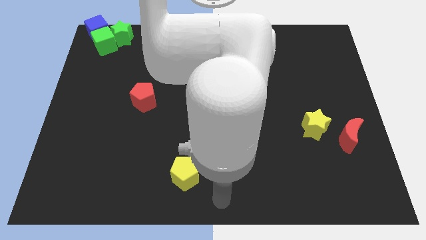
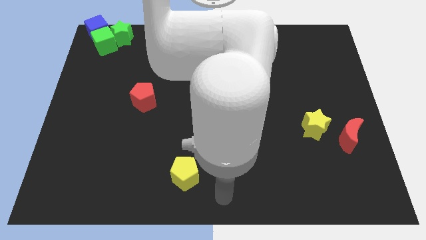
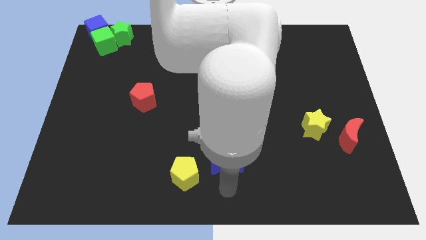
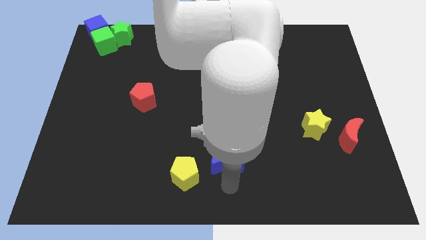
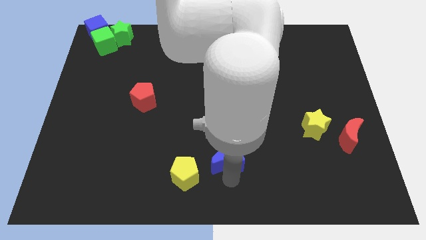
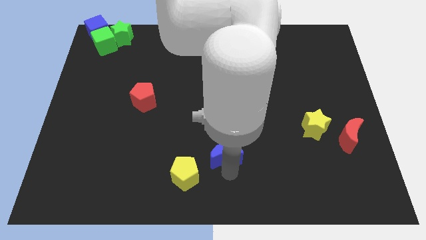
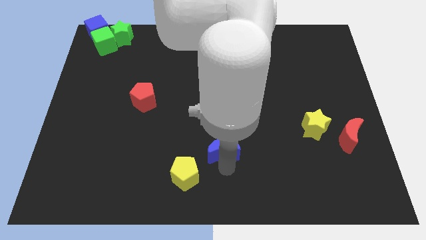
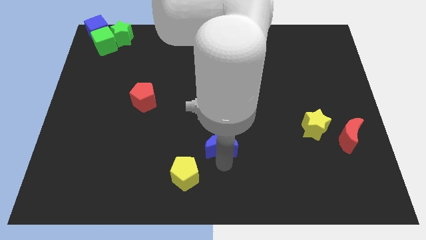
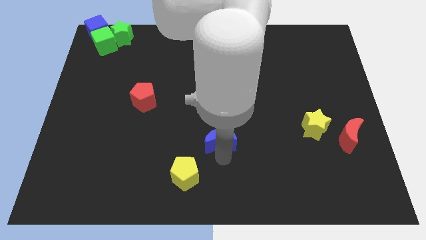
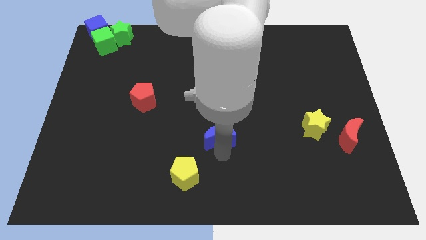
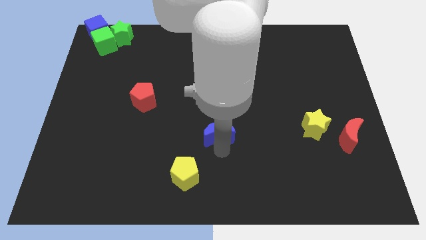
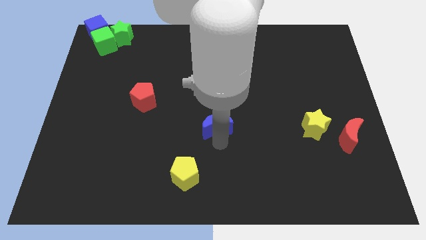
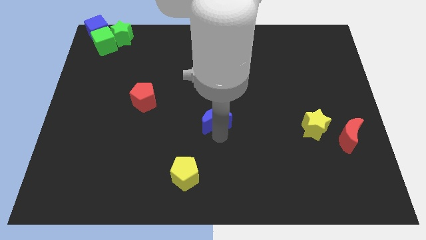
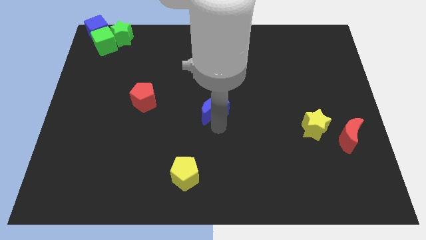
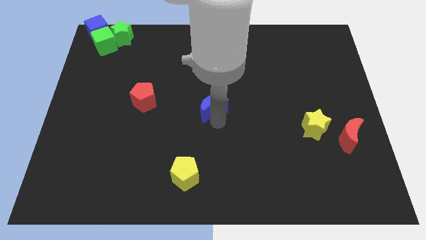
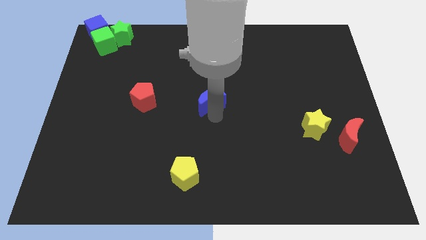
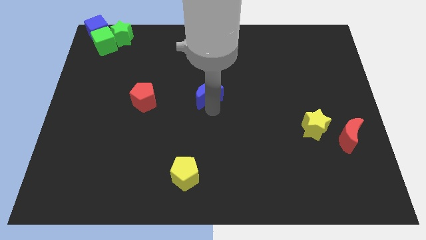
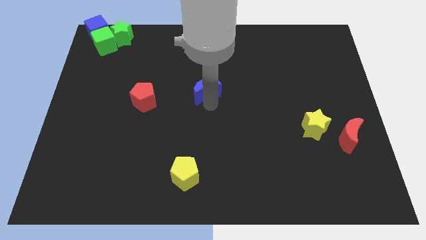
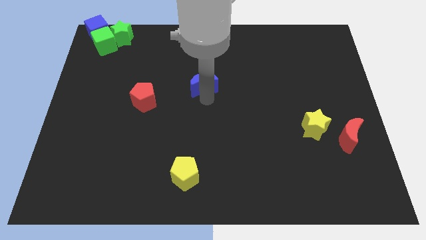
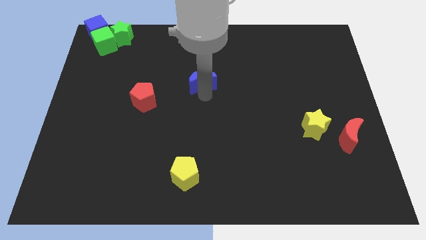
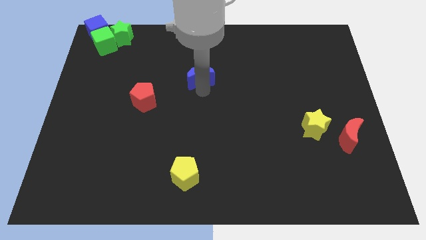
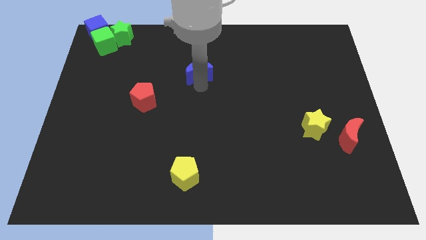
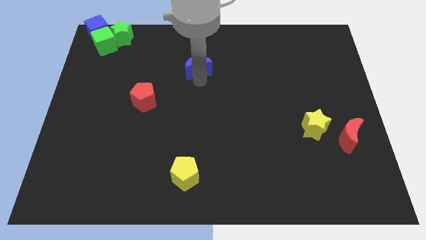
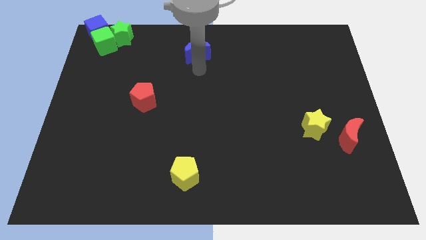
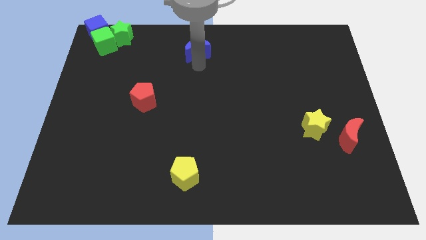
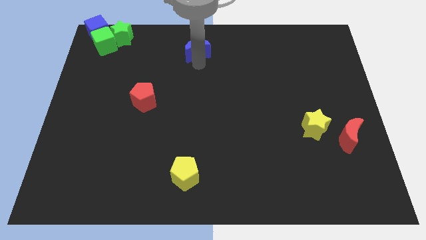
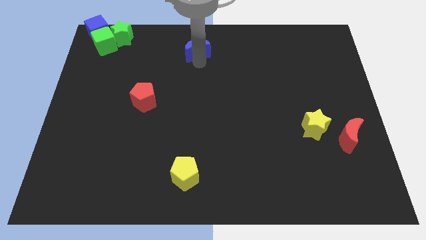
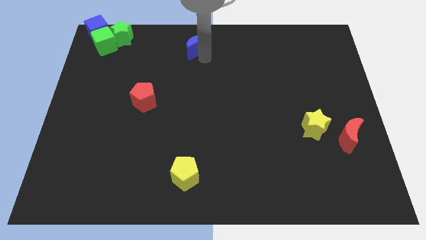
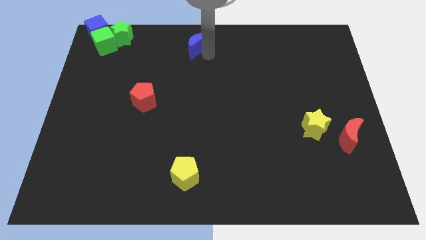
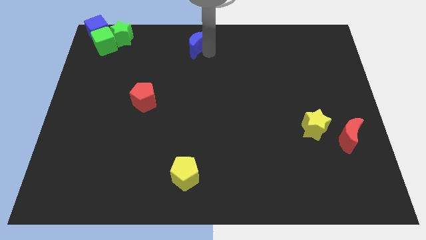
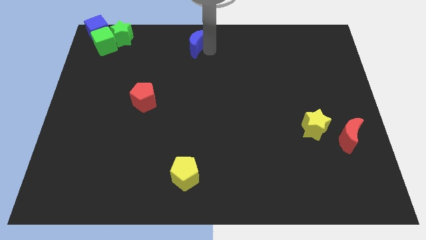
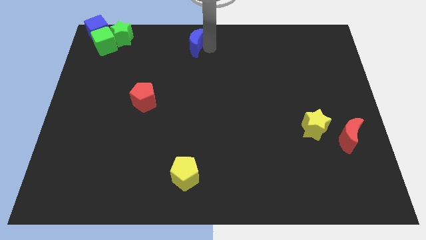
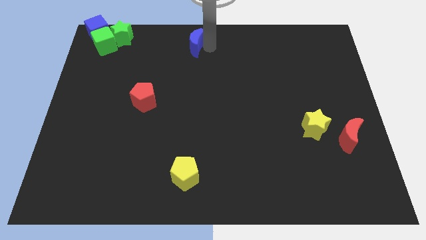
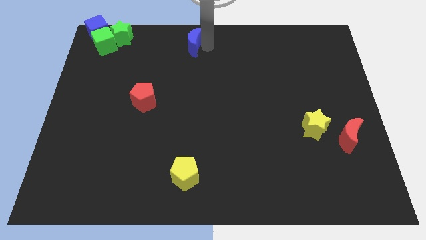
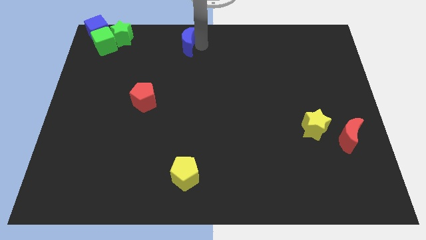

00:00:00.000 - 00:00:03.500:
move the blue moon to the horizontal right of the green star

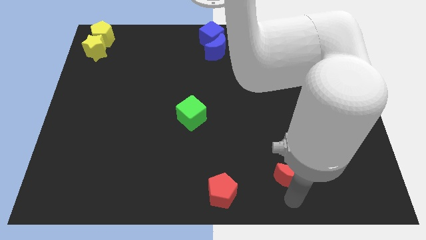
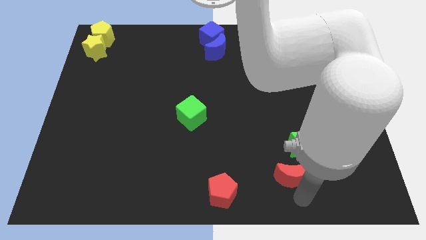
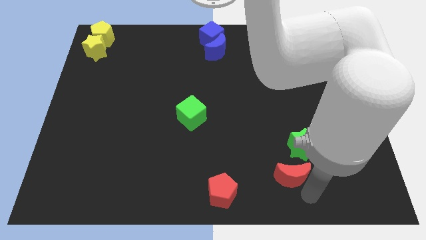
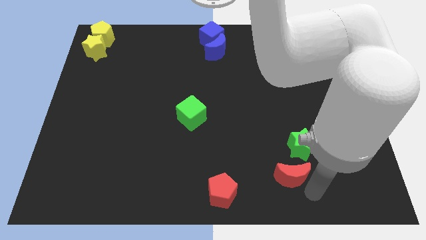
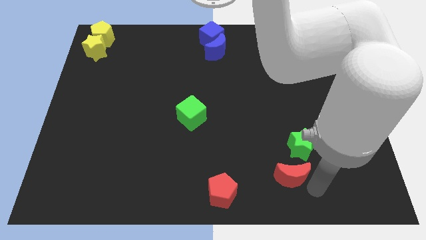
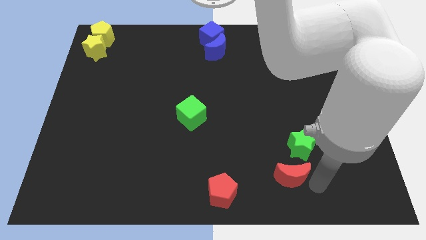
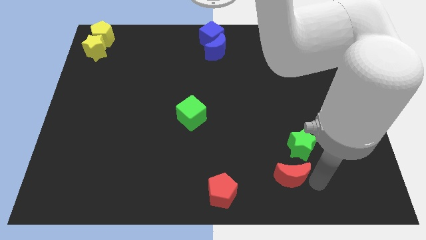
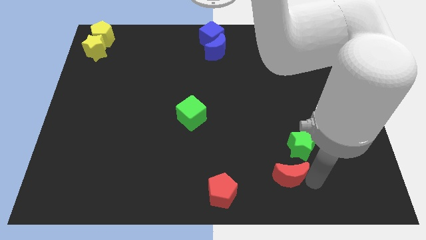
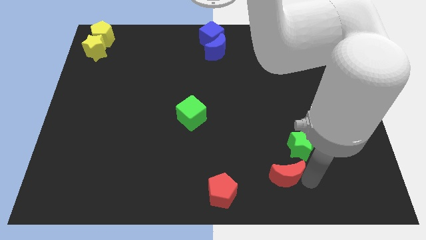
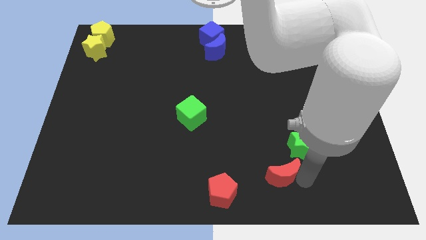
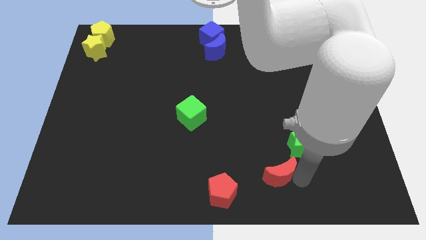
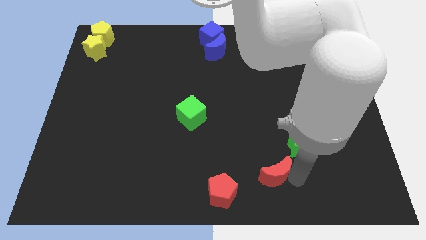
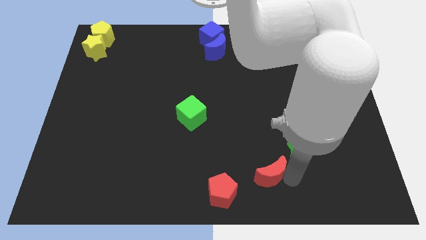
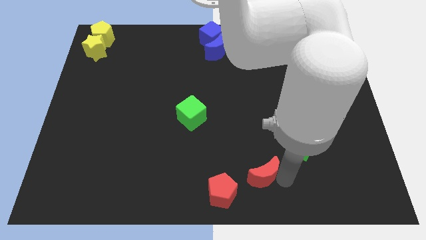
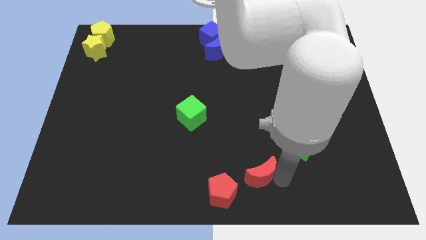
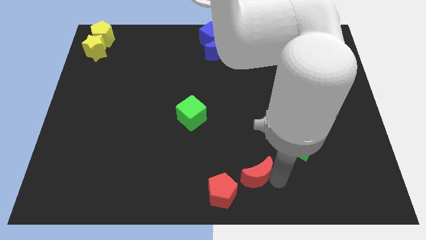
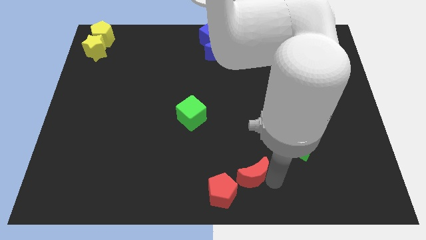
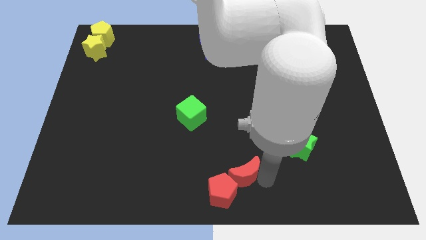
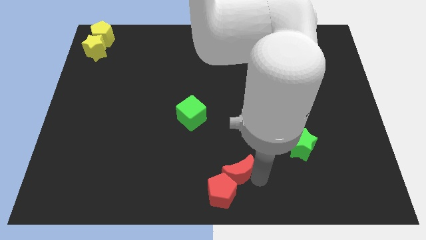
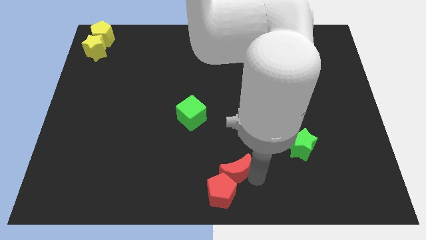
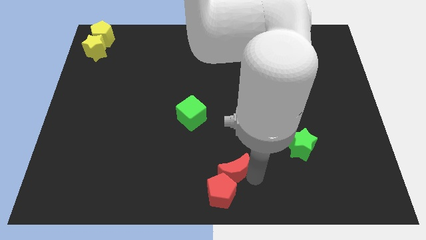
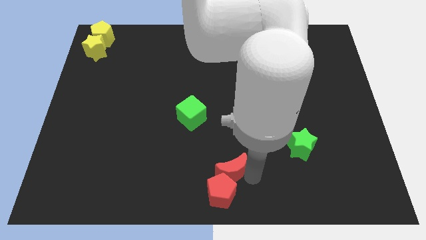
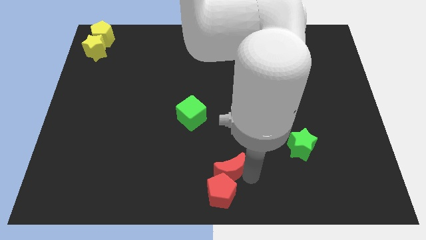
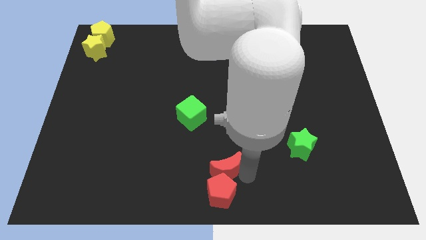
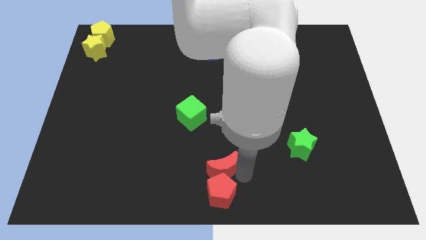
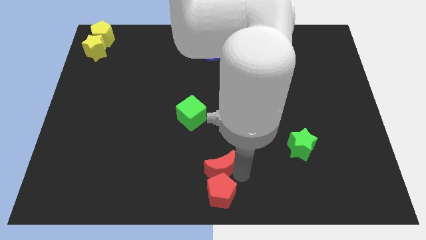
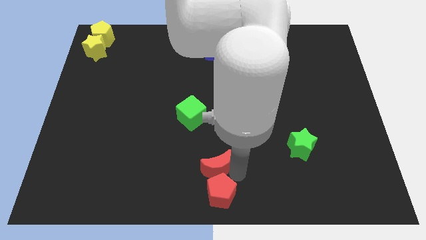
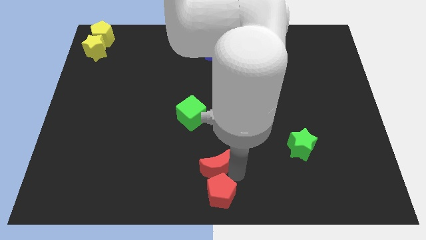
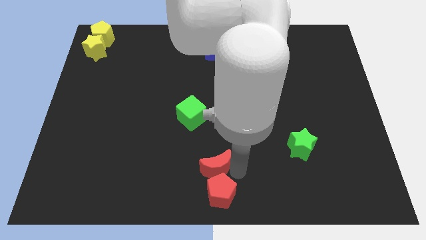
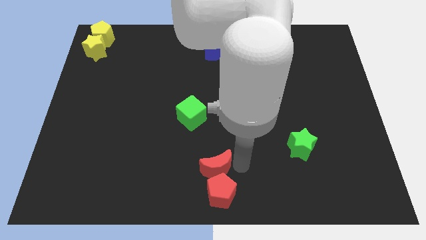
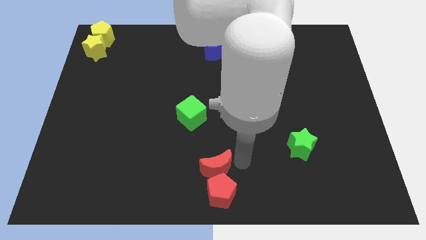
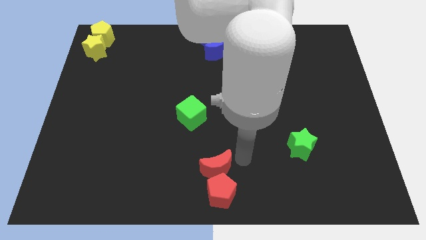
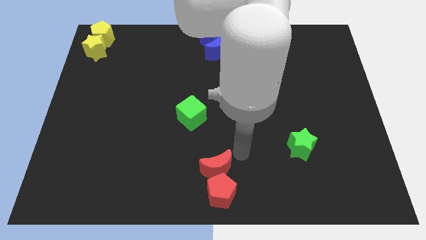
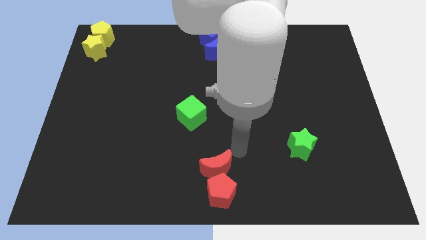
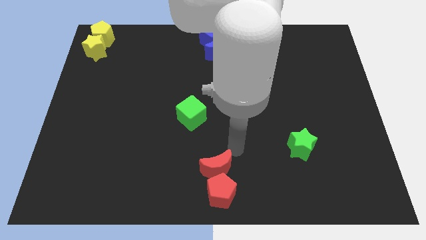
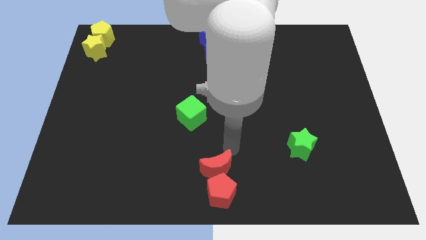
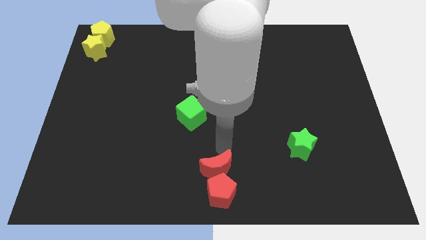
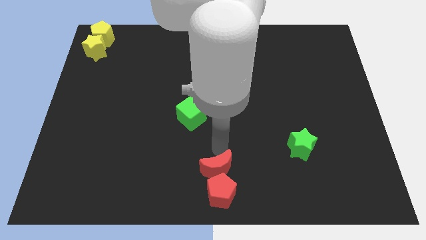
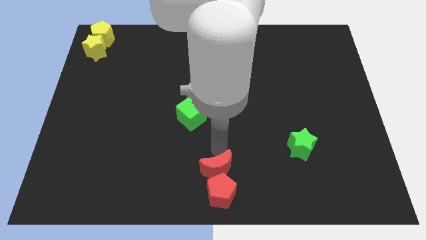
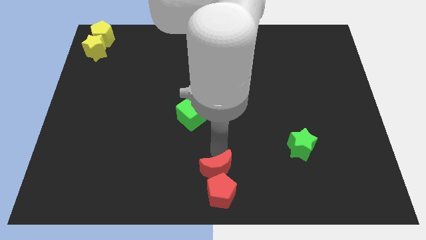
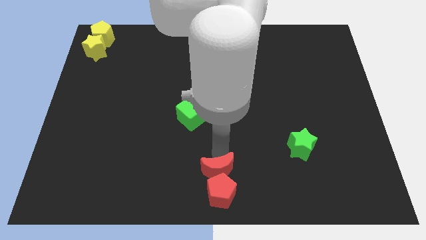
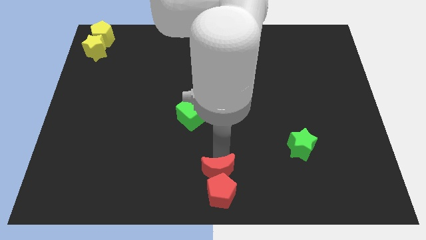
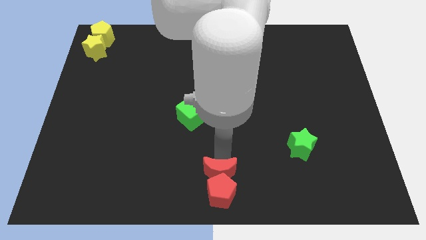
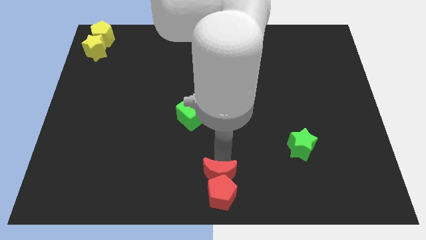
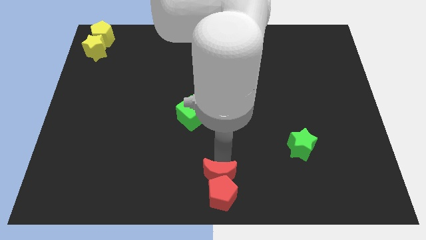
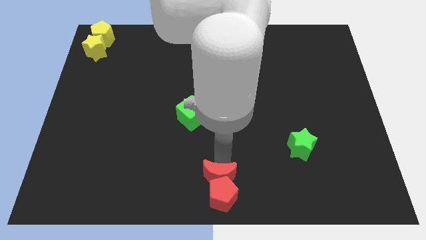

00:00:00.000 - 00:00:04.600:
place the red crescent above the red pentagon

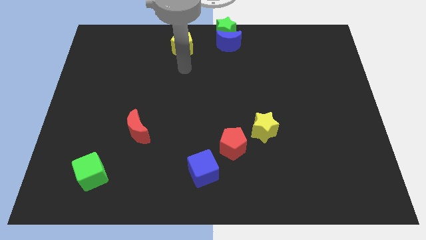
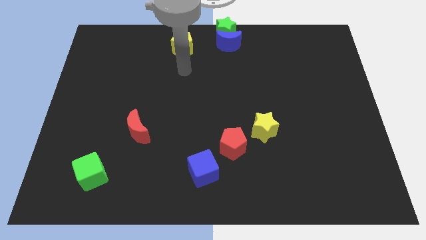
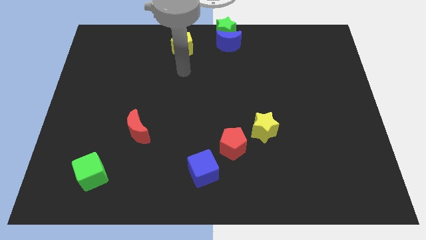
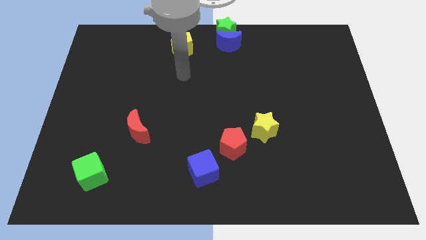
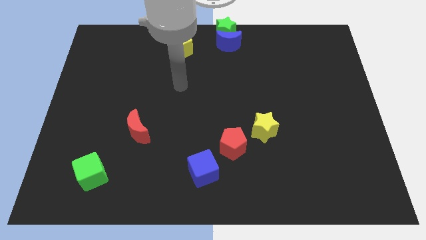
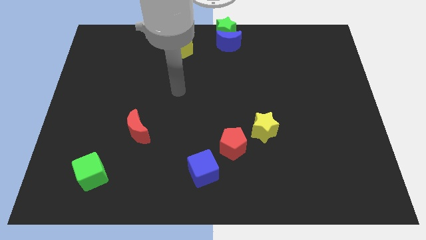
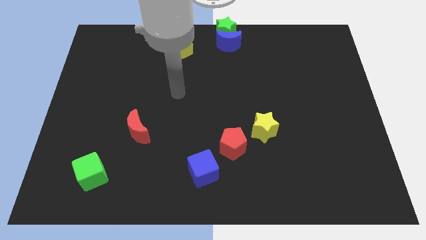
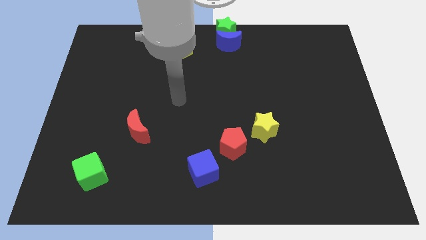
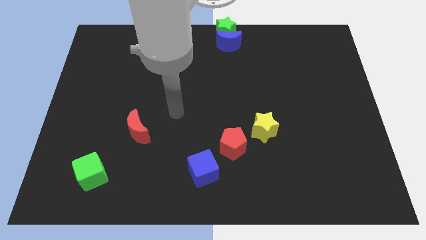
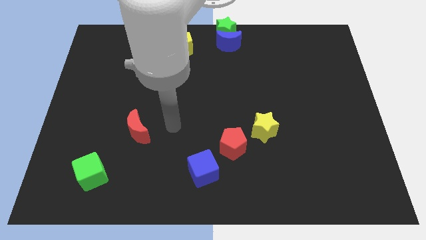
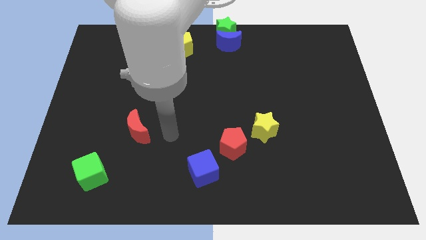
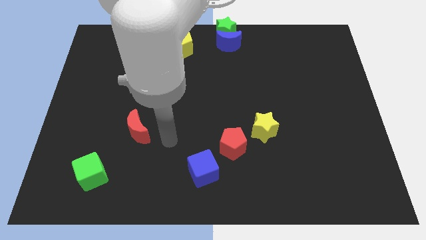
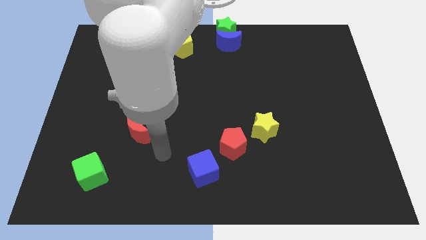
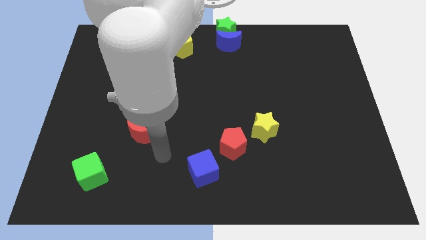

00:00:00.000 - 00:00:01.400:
move your arm away from the yellow pentagon
